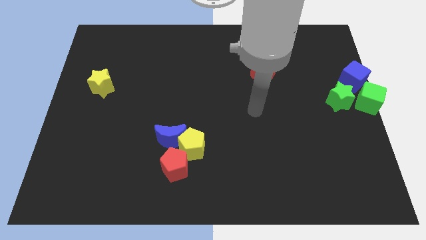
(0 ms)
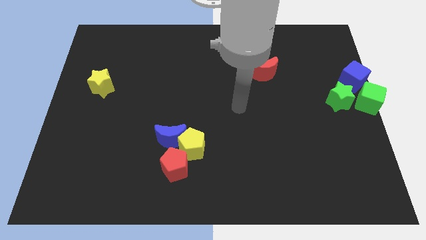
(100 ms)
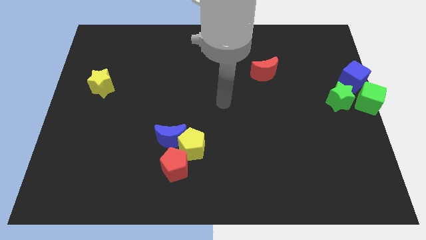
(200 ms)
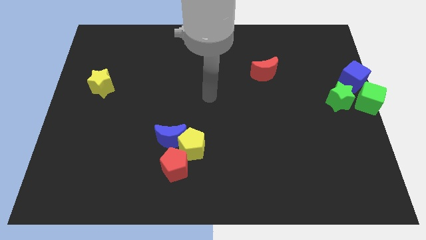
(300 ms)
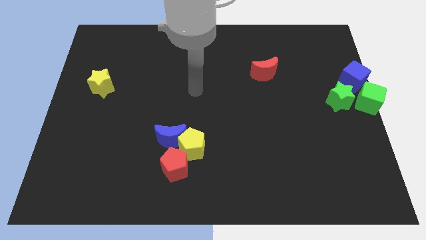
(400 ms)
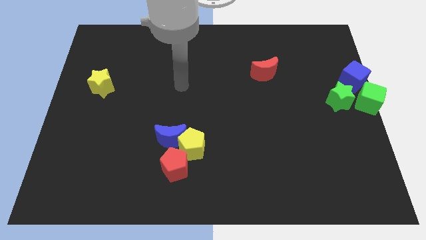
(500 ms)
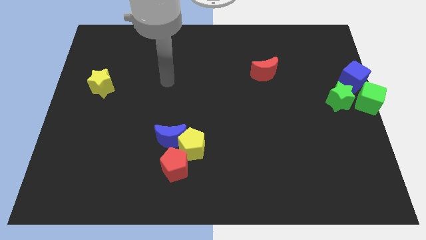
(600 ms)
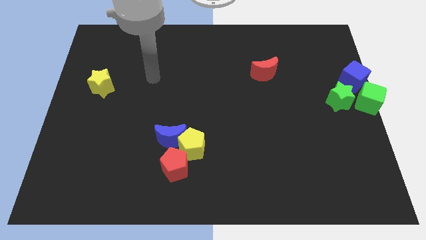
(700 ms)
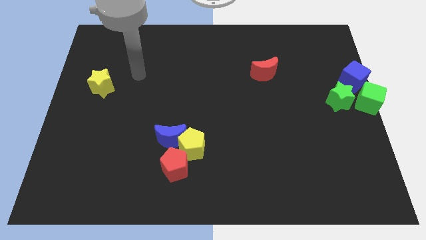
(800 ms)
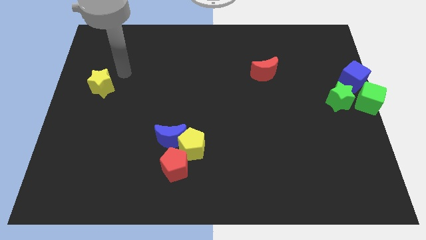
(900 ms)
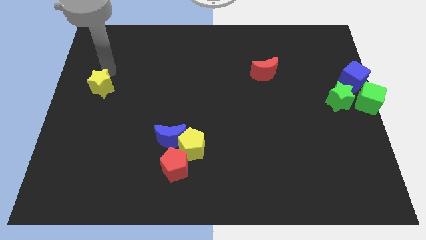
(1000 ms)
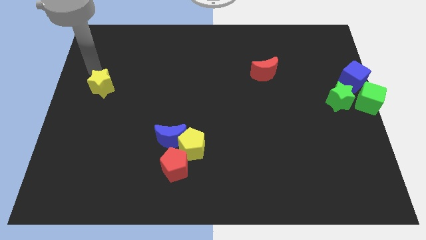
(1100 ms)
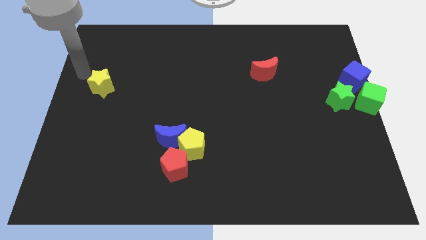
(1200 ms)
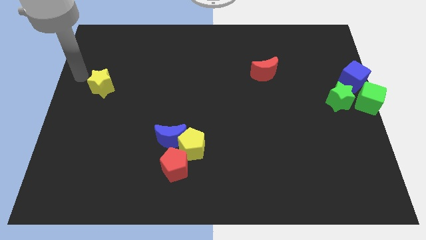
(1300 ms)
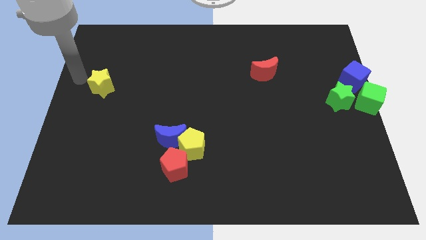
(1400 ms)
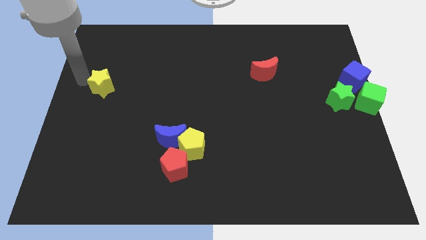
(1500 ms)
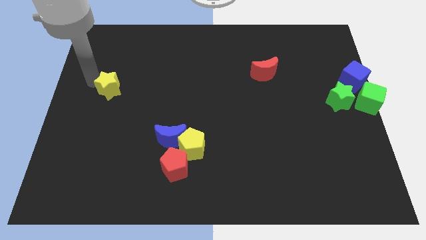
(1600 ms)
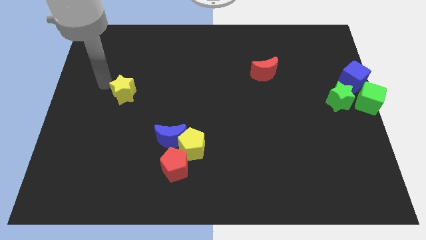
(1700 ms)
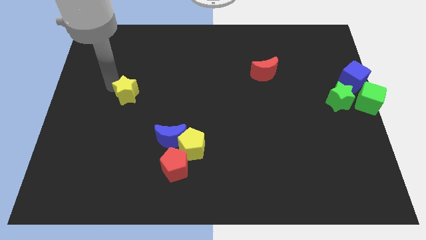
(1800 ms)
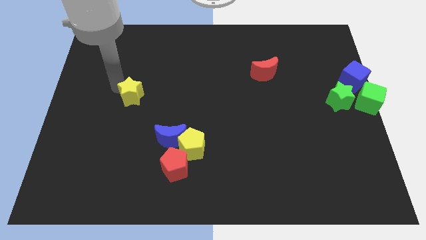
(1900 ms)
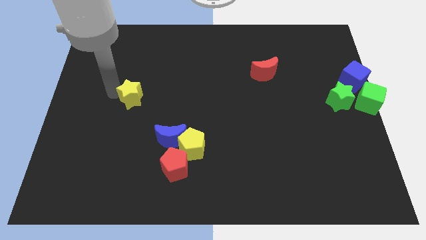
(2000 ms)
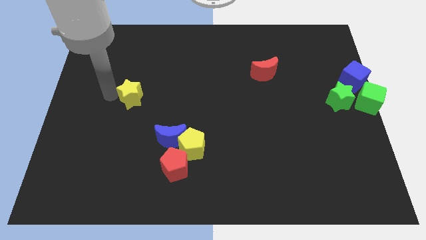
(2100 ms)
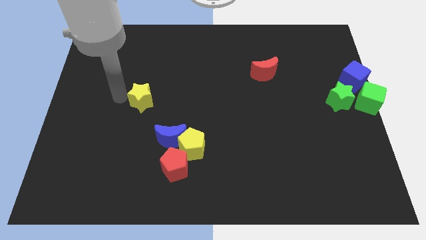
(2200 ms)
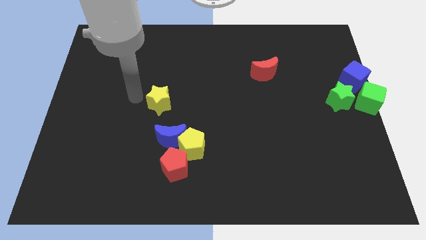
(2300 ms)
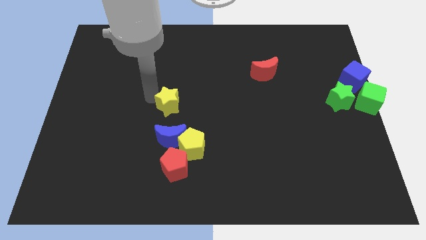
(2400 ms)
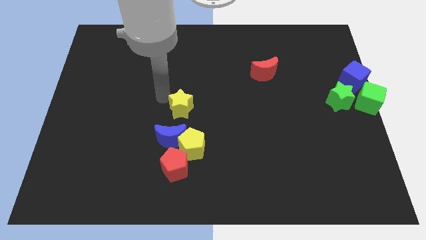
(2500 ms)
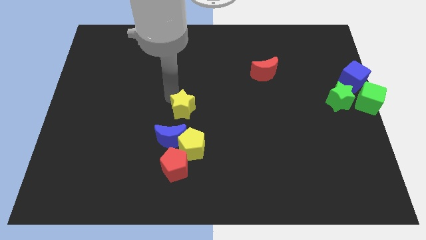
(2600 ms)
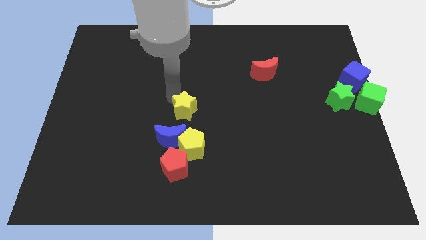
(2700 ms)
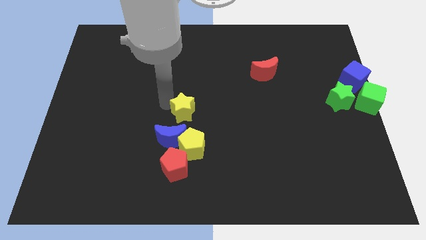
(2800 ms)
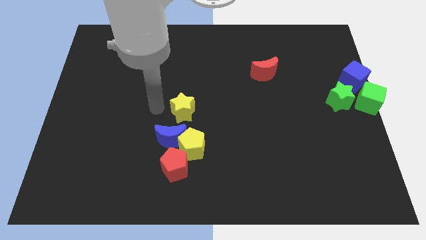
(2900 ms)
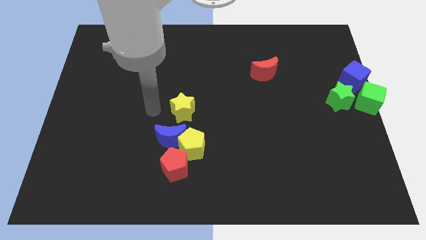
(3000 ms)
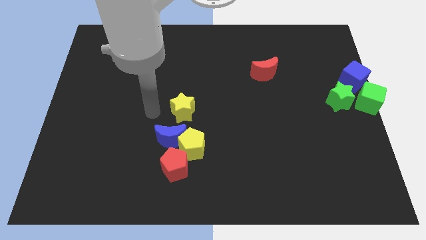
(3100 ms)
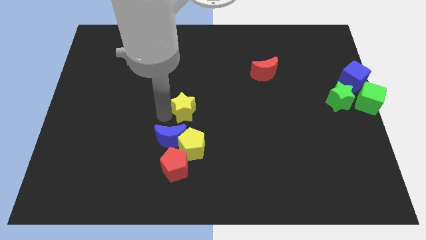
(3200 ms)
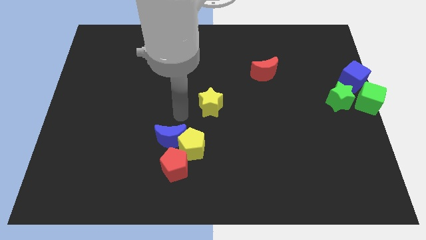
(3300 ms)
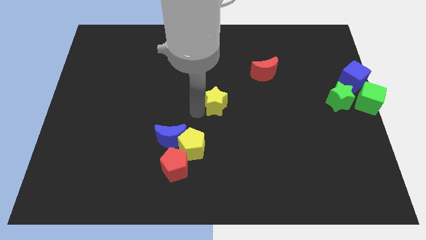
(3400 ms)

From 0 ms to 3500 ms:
push the yellow star towards the center

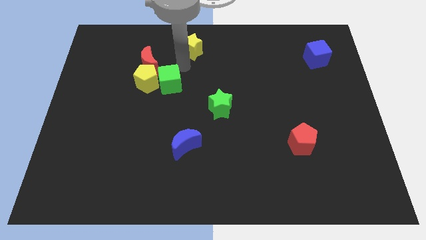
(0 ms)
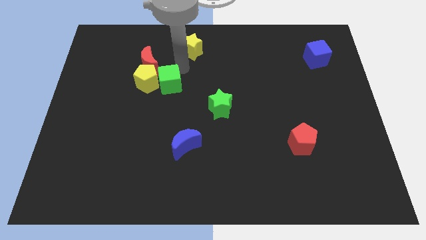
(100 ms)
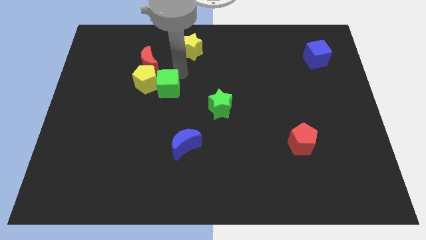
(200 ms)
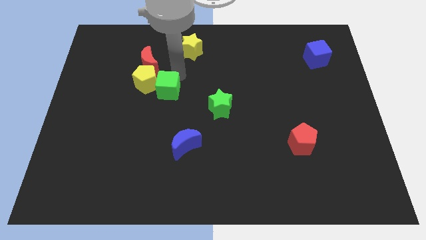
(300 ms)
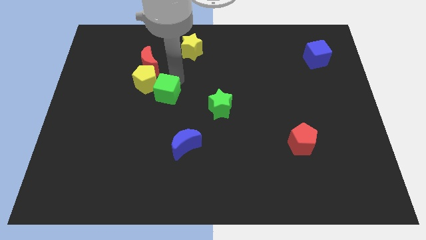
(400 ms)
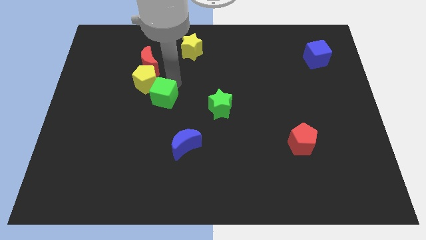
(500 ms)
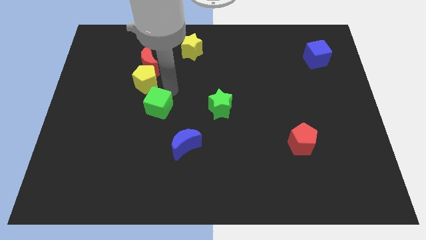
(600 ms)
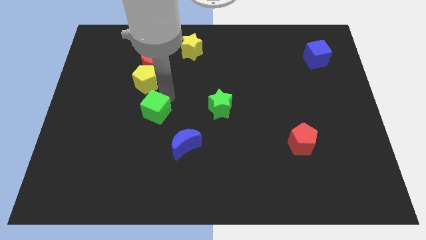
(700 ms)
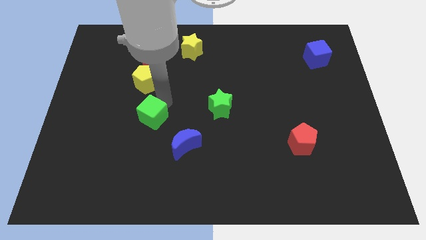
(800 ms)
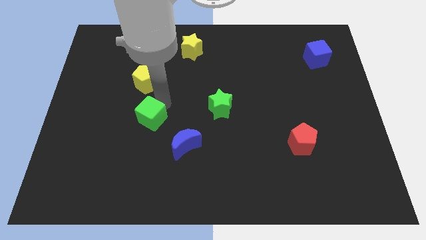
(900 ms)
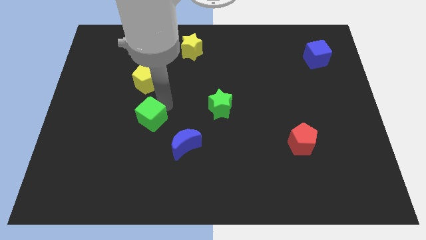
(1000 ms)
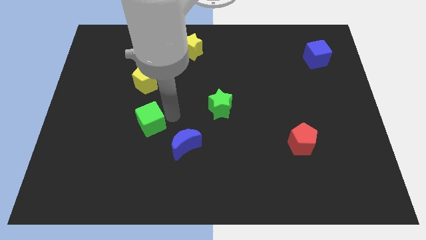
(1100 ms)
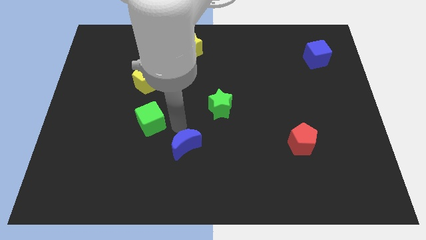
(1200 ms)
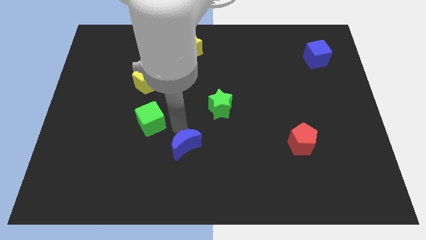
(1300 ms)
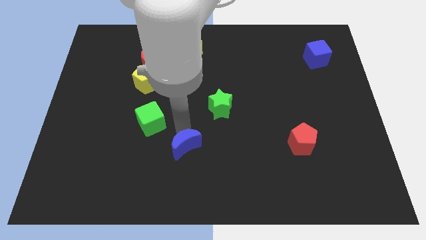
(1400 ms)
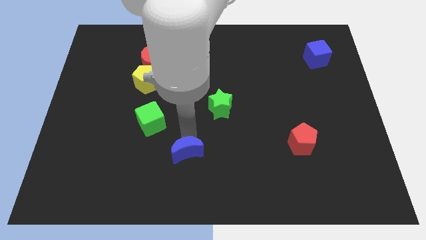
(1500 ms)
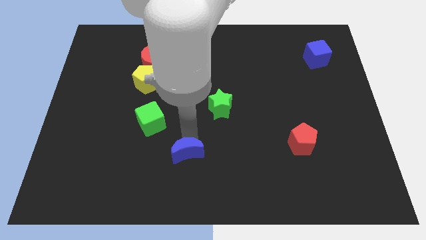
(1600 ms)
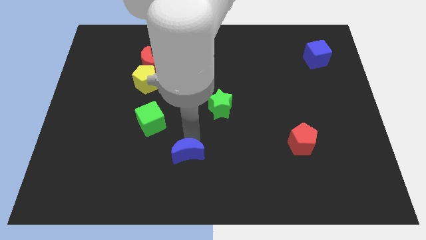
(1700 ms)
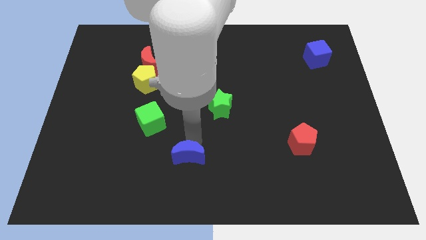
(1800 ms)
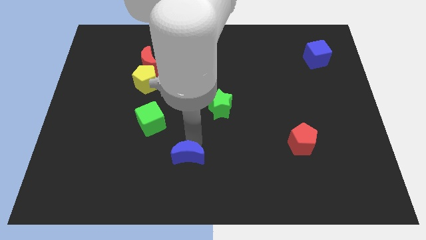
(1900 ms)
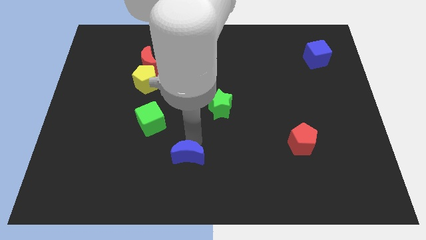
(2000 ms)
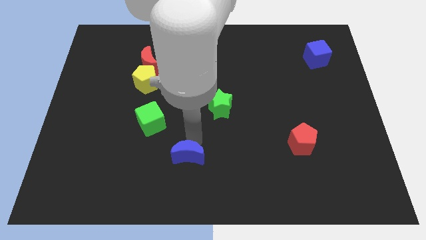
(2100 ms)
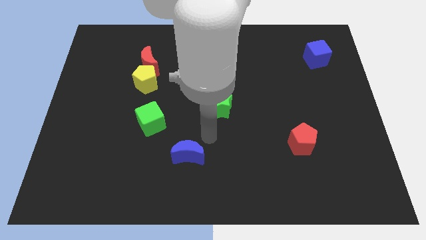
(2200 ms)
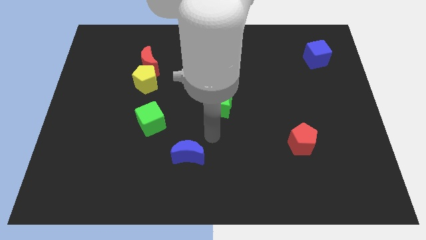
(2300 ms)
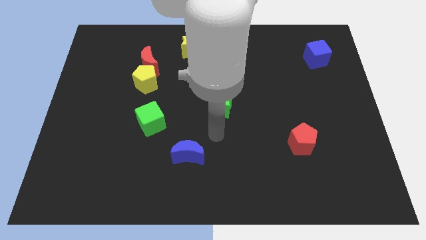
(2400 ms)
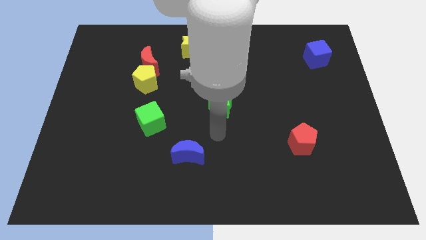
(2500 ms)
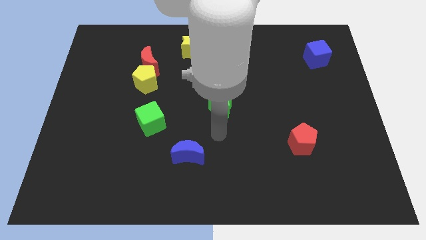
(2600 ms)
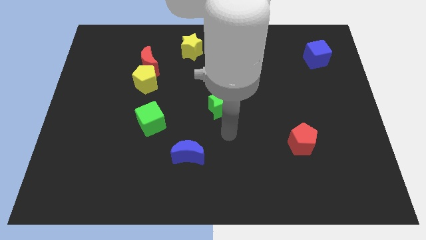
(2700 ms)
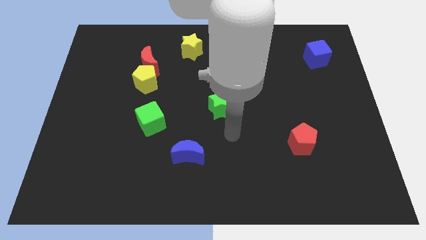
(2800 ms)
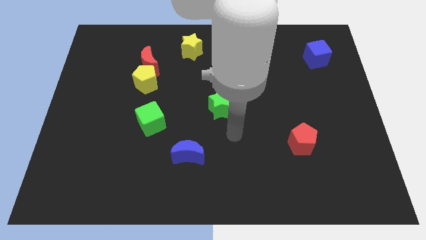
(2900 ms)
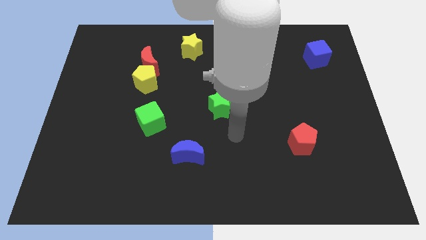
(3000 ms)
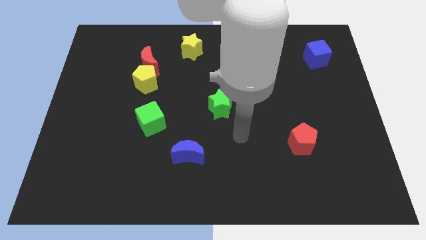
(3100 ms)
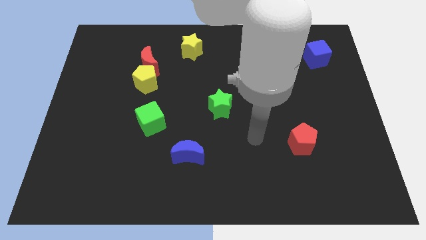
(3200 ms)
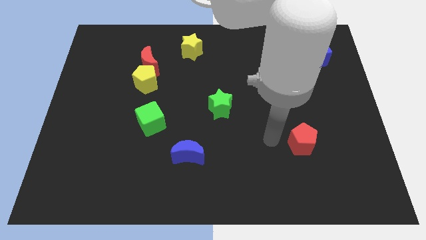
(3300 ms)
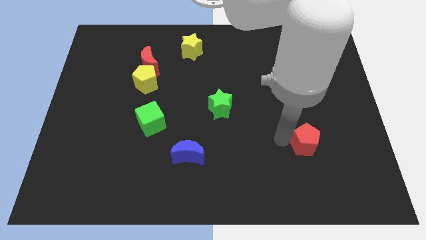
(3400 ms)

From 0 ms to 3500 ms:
slide the green cube and the blue moon down slightly

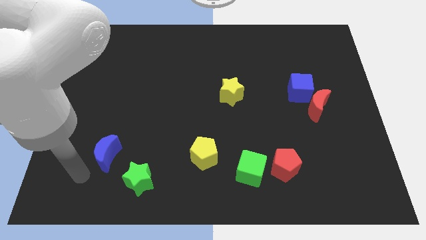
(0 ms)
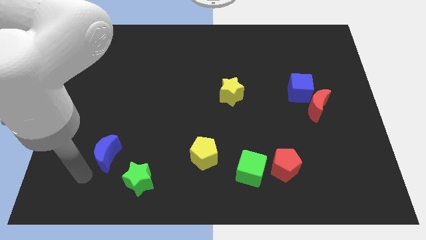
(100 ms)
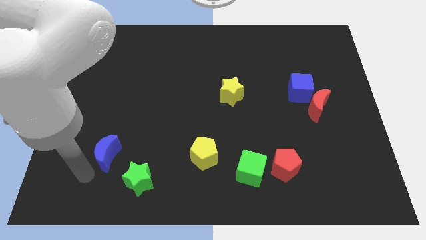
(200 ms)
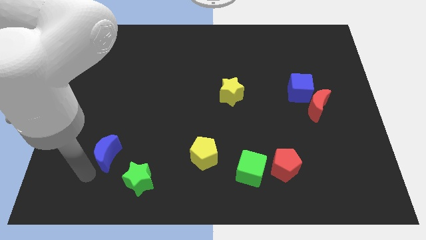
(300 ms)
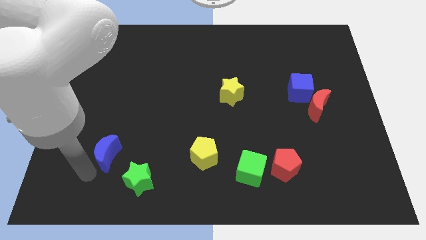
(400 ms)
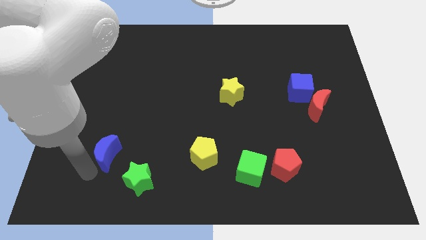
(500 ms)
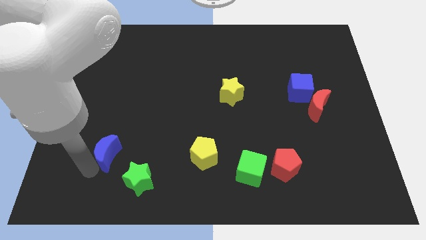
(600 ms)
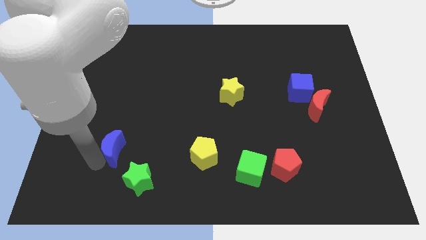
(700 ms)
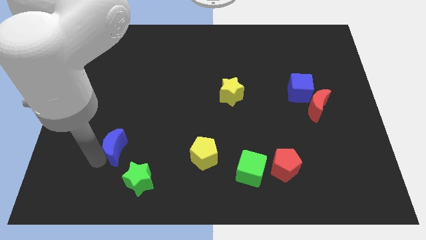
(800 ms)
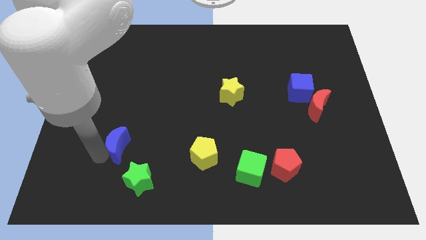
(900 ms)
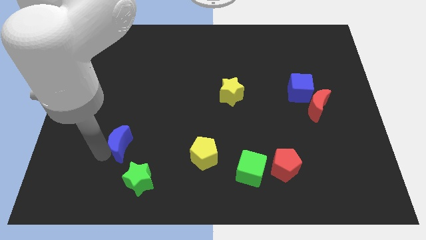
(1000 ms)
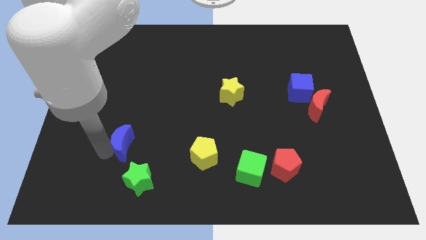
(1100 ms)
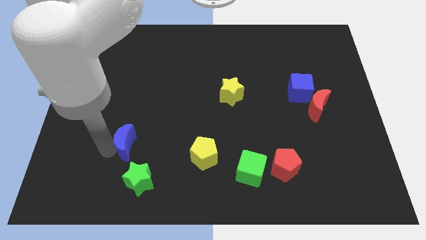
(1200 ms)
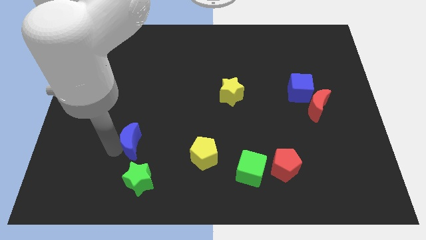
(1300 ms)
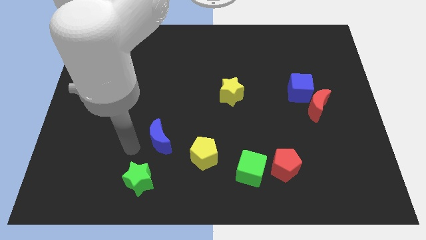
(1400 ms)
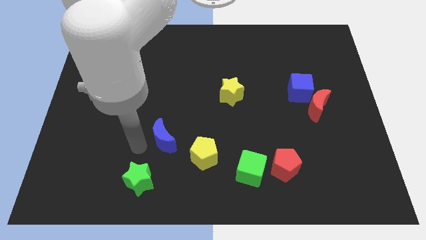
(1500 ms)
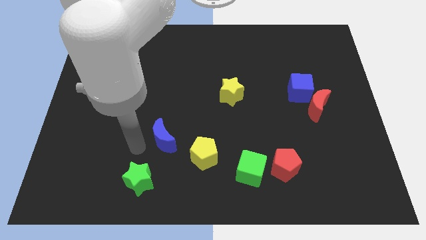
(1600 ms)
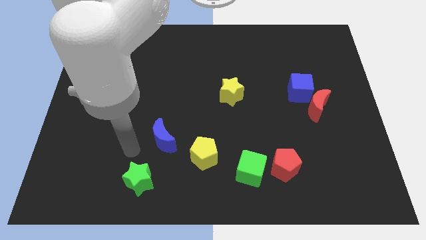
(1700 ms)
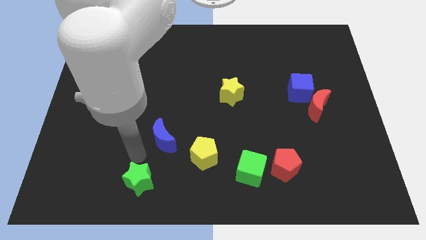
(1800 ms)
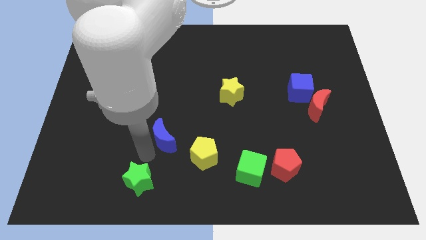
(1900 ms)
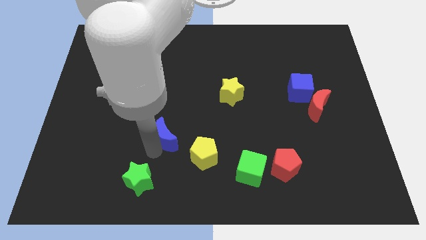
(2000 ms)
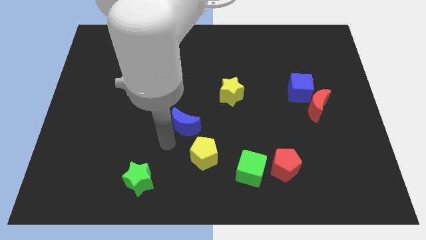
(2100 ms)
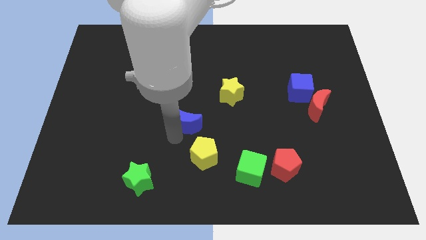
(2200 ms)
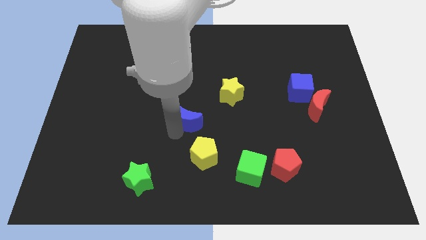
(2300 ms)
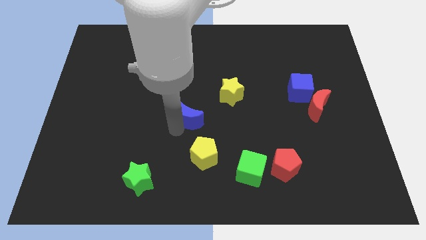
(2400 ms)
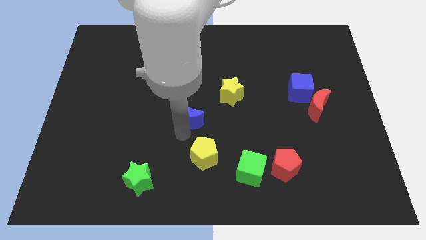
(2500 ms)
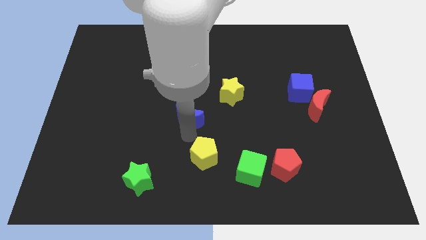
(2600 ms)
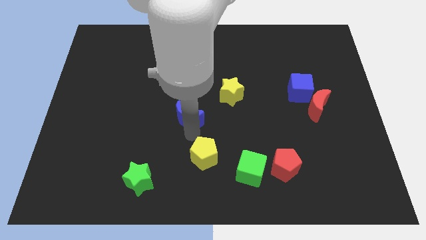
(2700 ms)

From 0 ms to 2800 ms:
place the blue moon diagonally top left to the yellow pentagon
